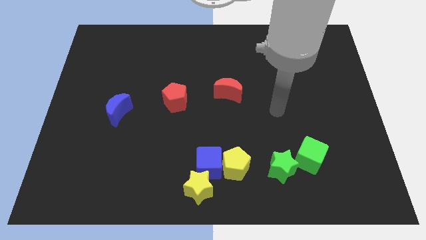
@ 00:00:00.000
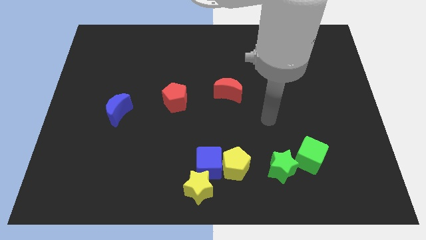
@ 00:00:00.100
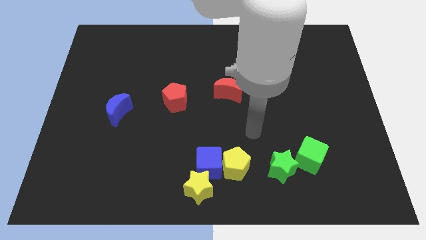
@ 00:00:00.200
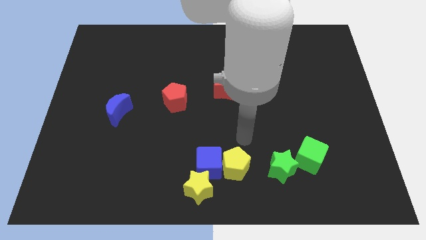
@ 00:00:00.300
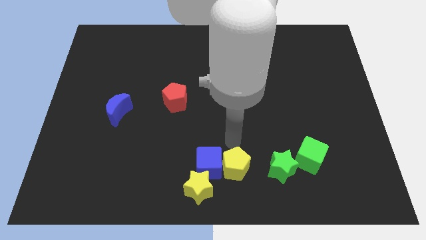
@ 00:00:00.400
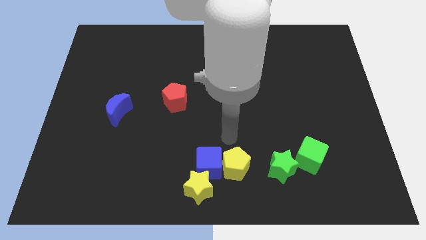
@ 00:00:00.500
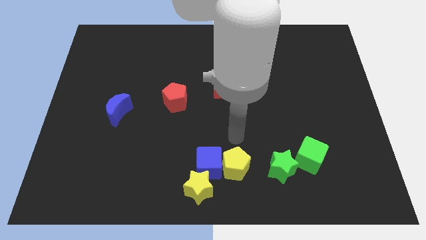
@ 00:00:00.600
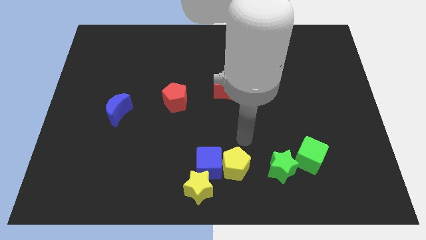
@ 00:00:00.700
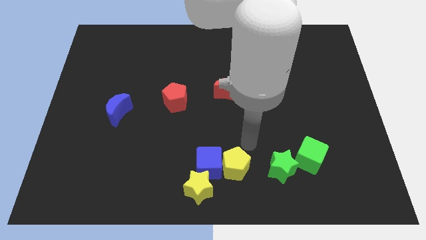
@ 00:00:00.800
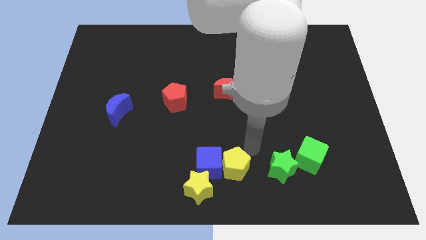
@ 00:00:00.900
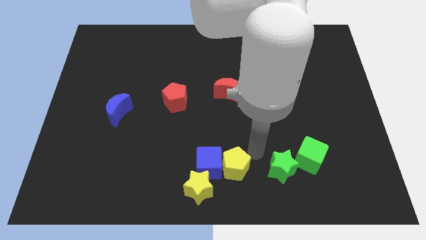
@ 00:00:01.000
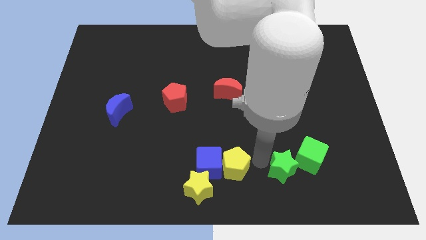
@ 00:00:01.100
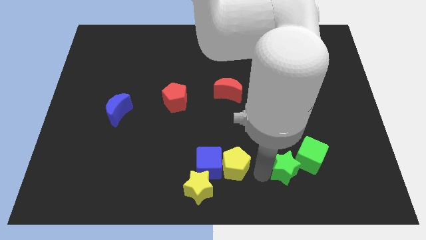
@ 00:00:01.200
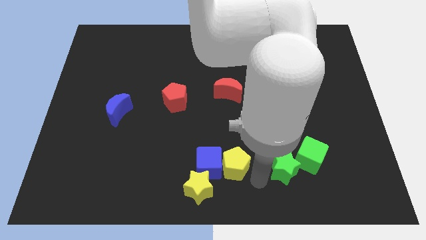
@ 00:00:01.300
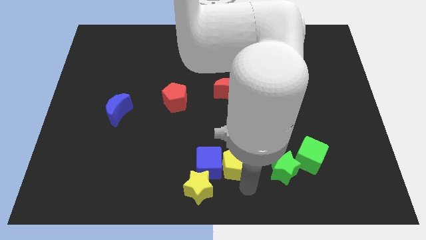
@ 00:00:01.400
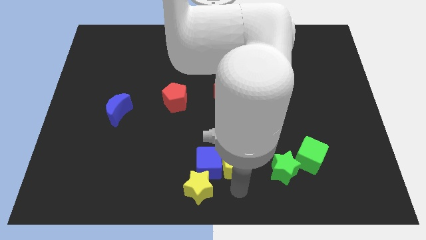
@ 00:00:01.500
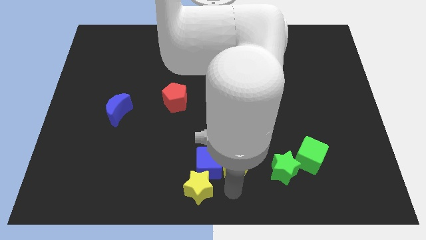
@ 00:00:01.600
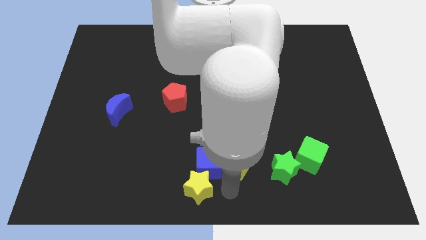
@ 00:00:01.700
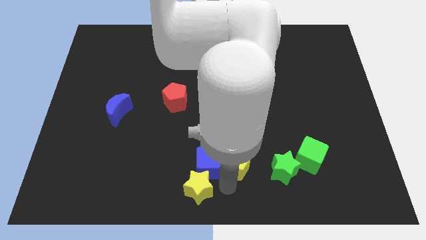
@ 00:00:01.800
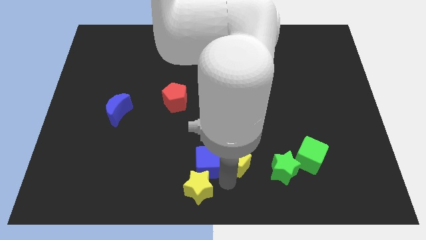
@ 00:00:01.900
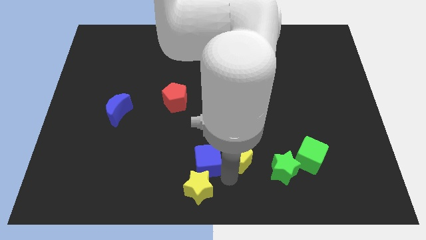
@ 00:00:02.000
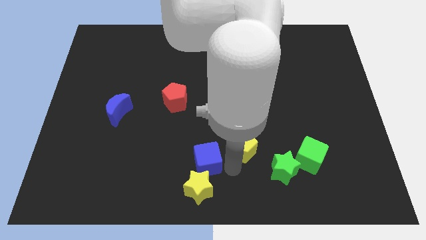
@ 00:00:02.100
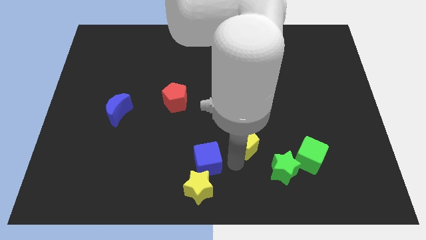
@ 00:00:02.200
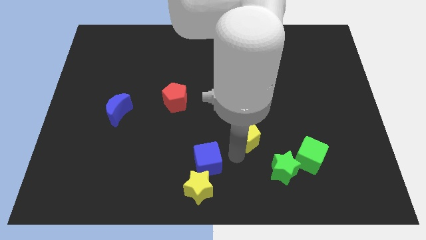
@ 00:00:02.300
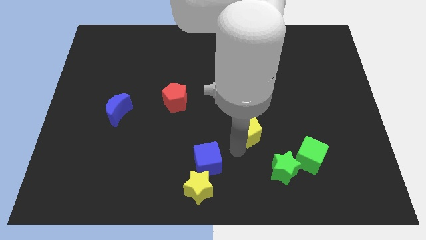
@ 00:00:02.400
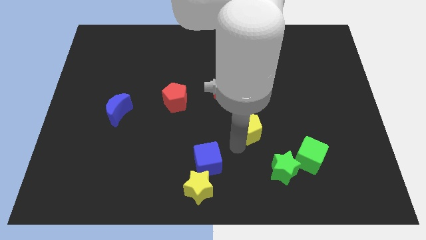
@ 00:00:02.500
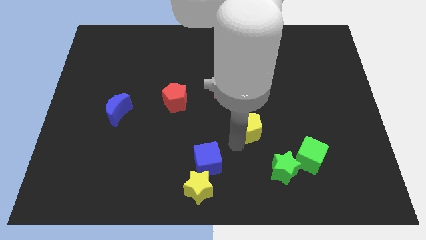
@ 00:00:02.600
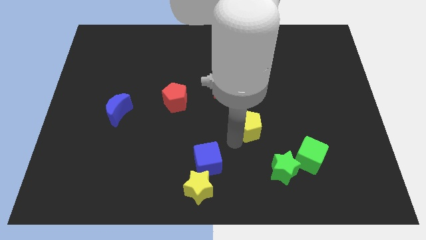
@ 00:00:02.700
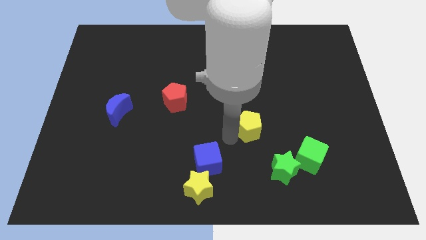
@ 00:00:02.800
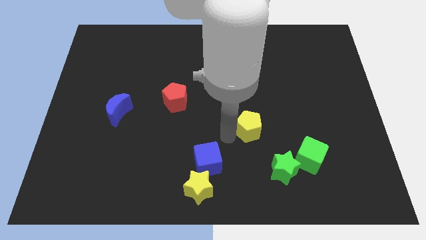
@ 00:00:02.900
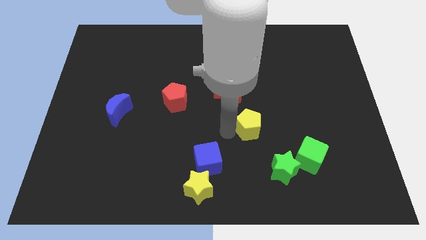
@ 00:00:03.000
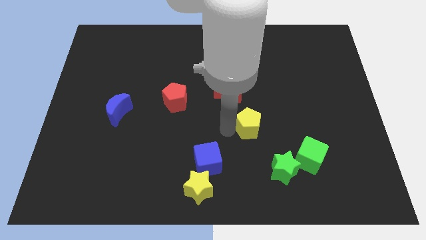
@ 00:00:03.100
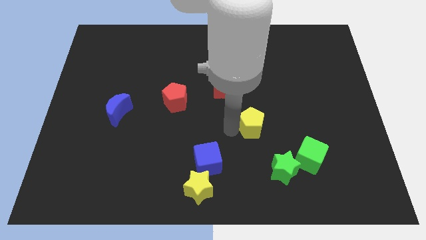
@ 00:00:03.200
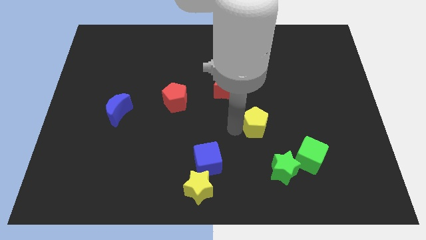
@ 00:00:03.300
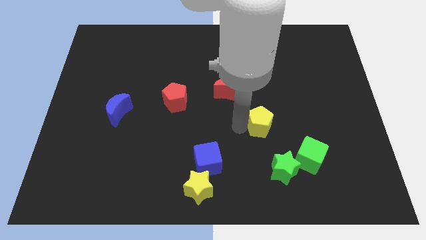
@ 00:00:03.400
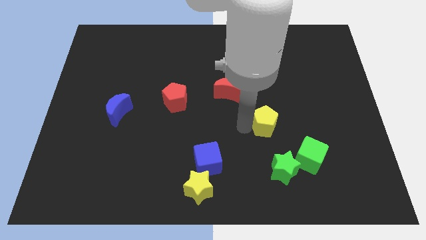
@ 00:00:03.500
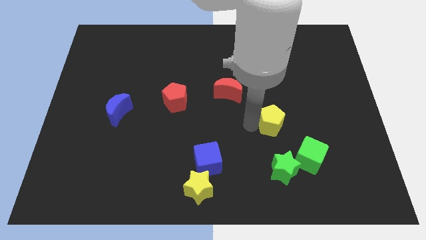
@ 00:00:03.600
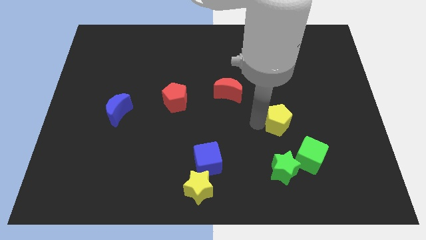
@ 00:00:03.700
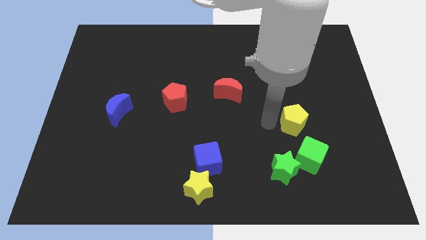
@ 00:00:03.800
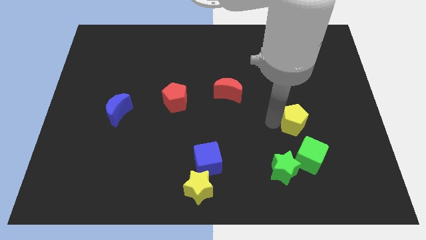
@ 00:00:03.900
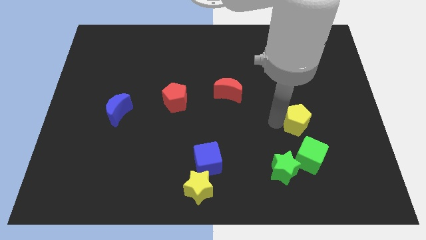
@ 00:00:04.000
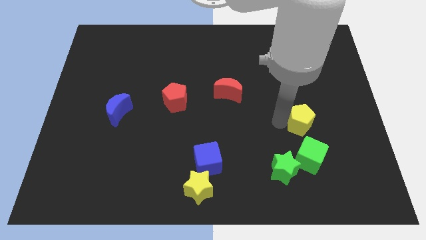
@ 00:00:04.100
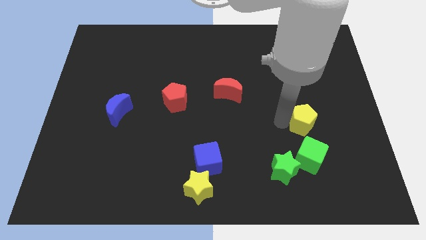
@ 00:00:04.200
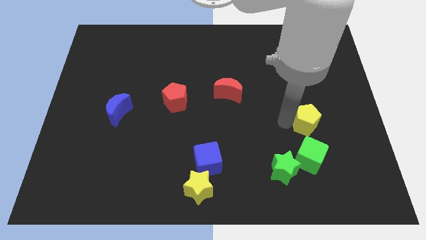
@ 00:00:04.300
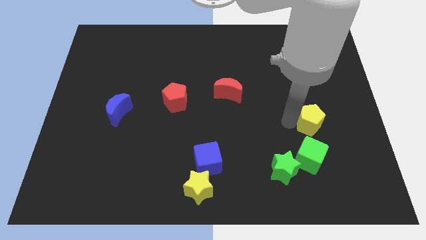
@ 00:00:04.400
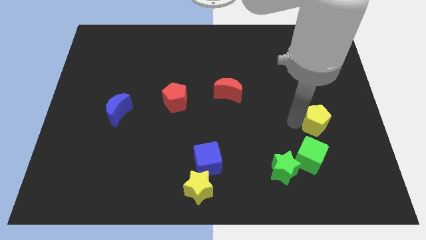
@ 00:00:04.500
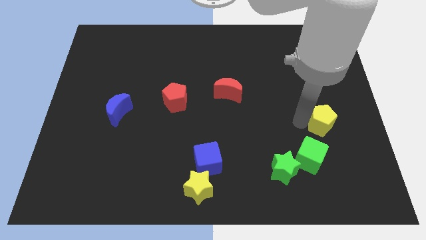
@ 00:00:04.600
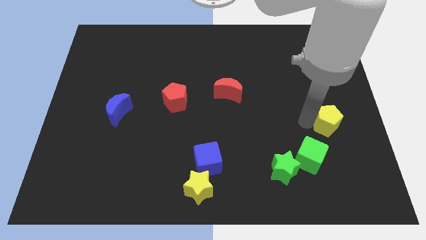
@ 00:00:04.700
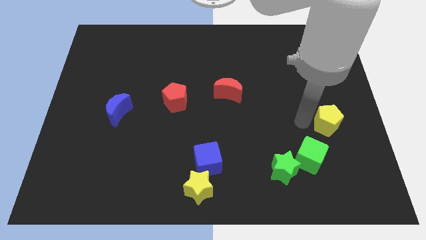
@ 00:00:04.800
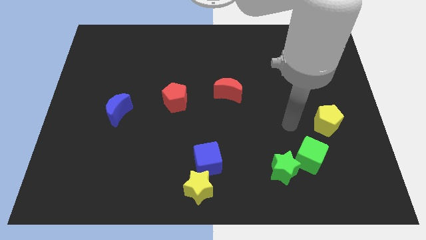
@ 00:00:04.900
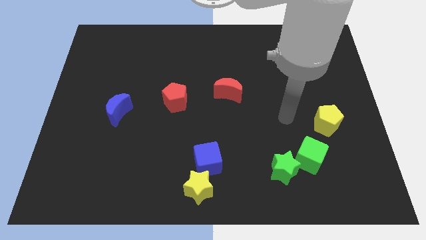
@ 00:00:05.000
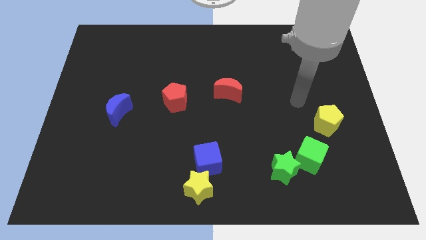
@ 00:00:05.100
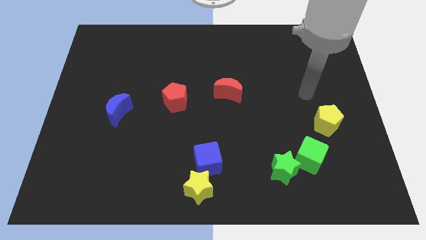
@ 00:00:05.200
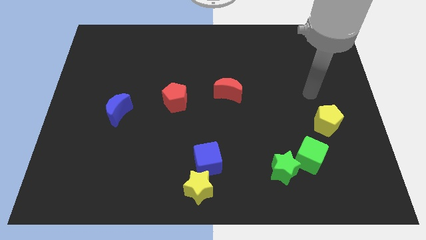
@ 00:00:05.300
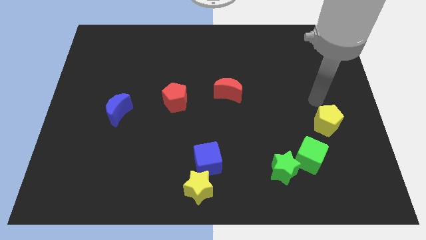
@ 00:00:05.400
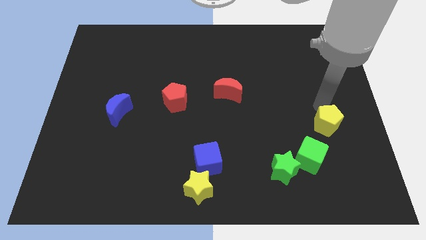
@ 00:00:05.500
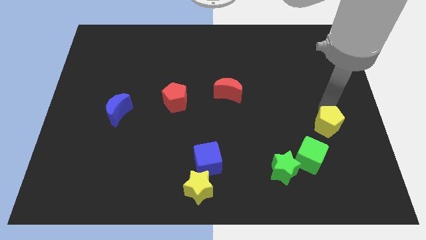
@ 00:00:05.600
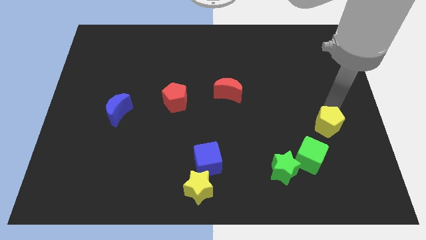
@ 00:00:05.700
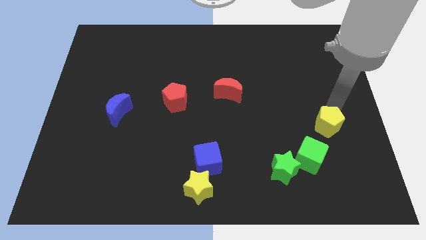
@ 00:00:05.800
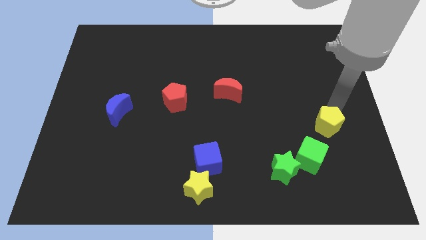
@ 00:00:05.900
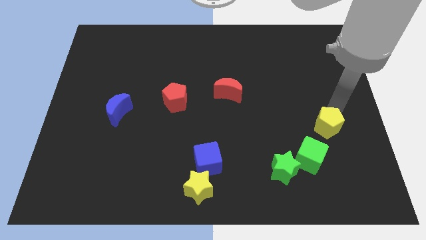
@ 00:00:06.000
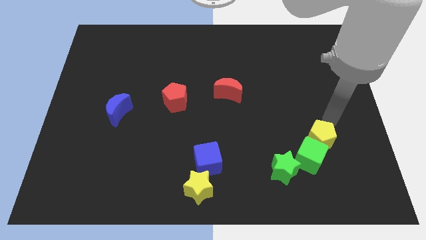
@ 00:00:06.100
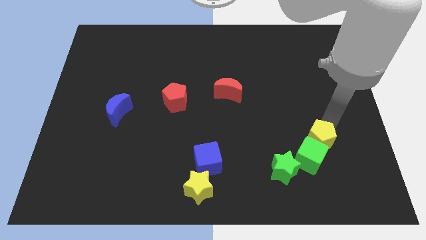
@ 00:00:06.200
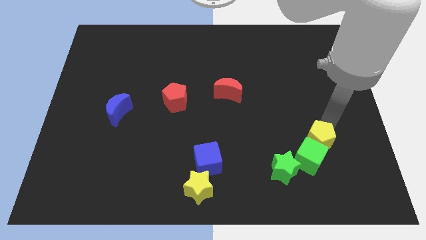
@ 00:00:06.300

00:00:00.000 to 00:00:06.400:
move the yellow pentagon to the green cube

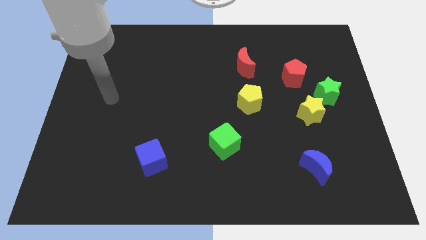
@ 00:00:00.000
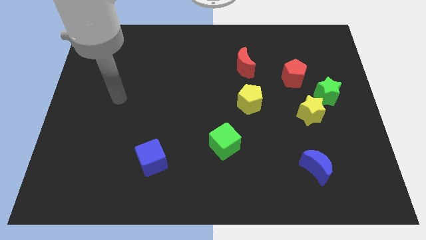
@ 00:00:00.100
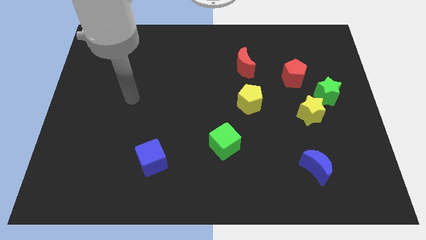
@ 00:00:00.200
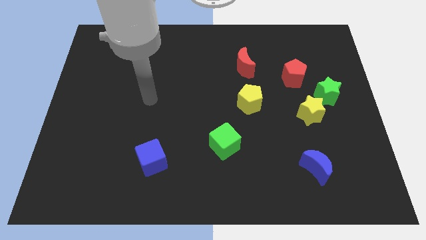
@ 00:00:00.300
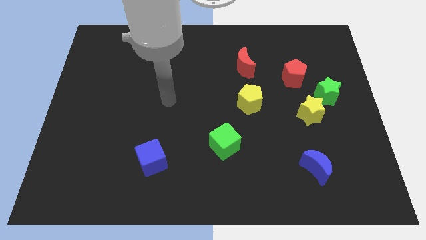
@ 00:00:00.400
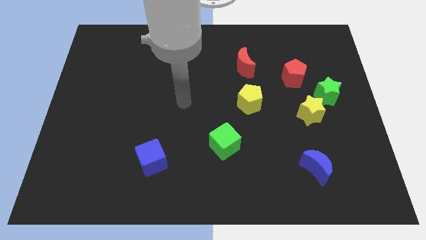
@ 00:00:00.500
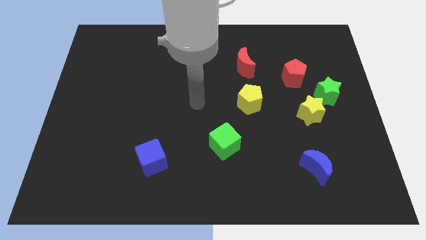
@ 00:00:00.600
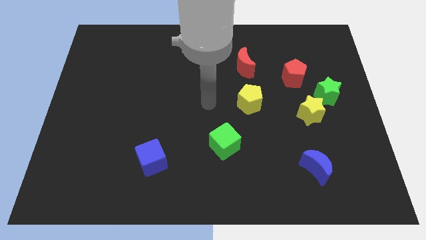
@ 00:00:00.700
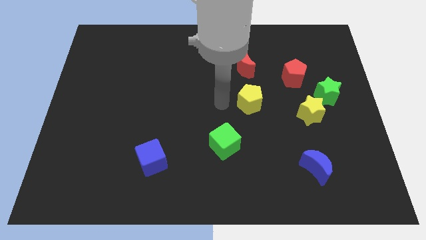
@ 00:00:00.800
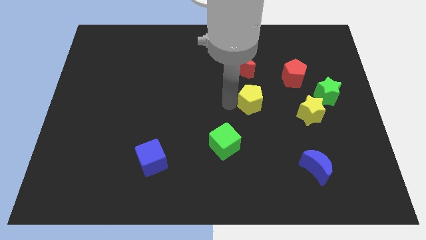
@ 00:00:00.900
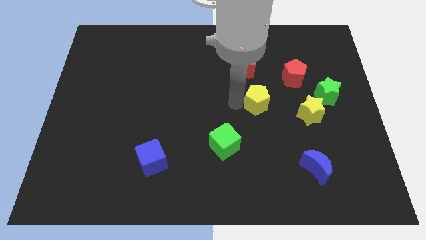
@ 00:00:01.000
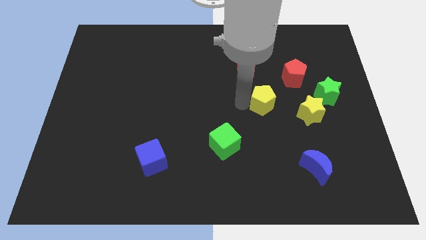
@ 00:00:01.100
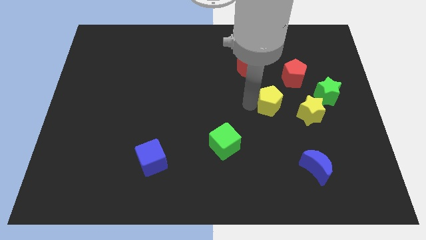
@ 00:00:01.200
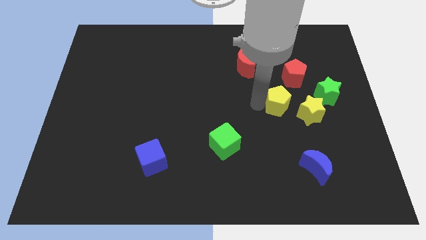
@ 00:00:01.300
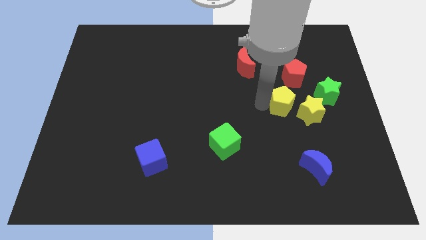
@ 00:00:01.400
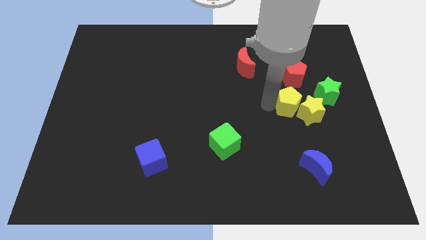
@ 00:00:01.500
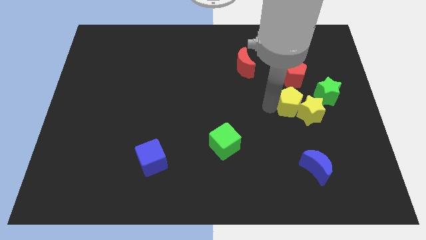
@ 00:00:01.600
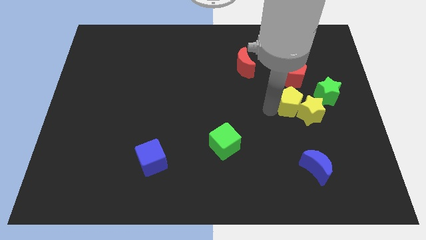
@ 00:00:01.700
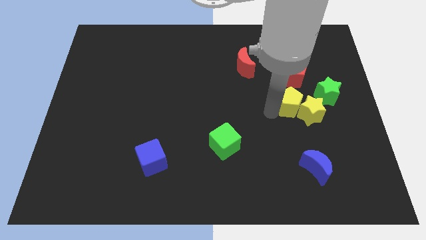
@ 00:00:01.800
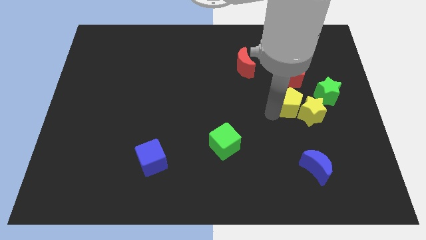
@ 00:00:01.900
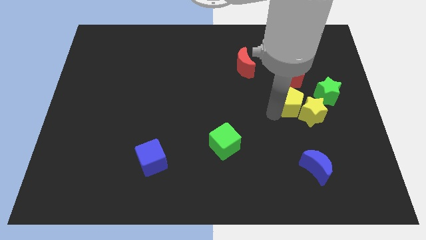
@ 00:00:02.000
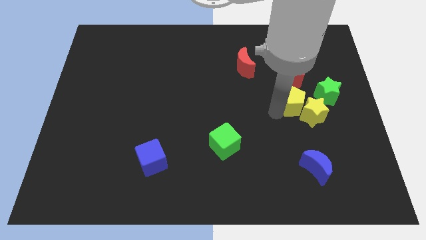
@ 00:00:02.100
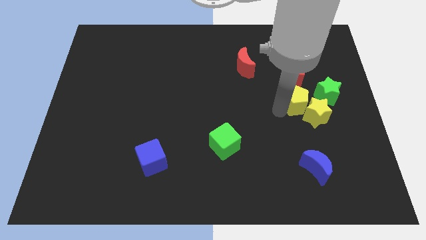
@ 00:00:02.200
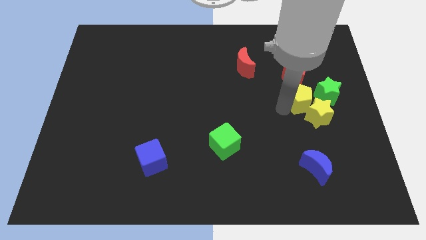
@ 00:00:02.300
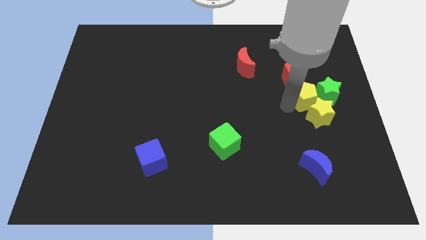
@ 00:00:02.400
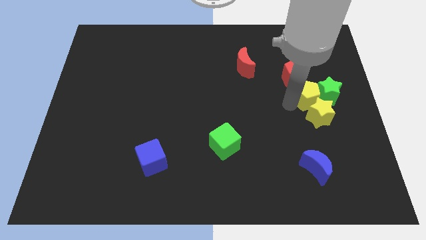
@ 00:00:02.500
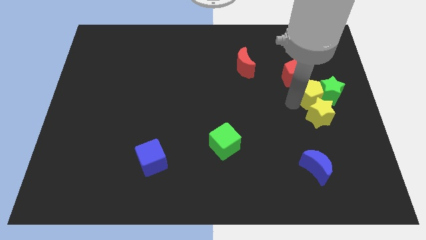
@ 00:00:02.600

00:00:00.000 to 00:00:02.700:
move the yellow pentagon next to the green star
